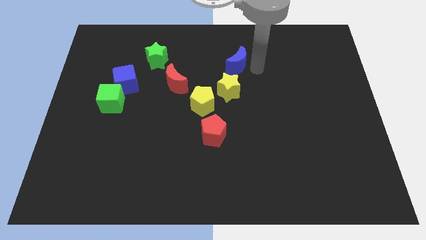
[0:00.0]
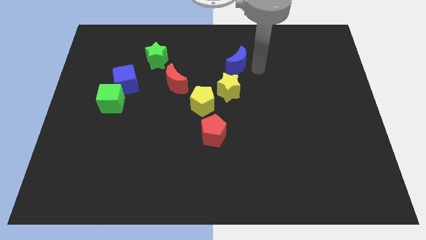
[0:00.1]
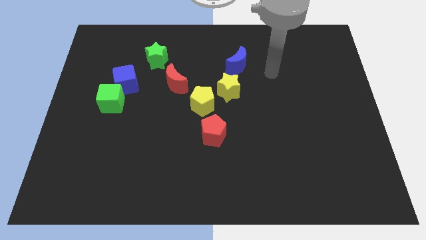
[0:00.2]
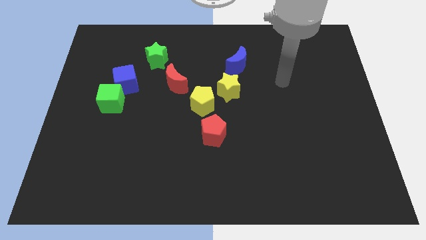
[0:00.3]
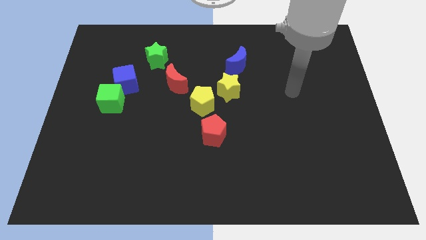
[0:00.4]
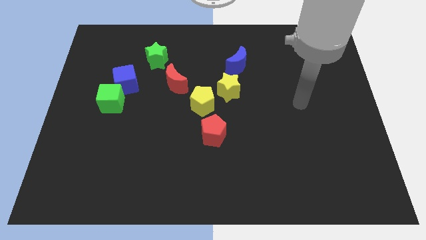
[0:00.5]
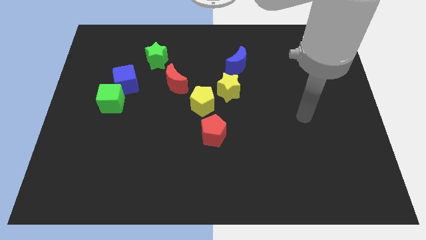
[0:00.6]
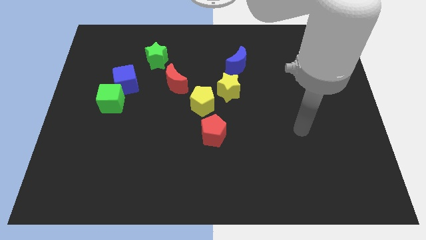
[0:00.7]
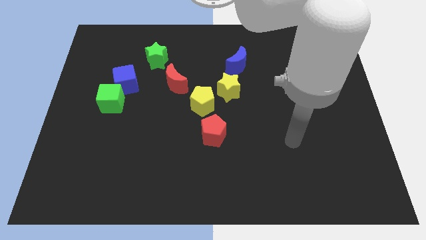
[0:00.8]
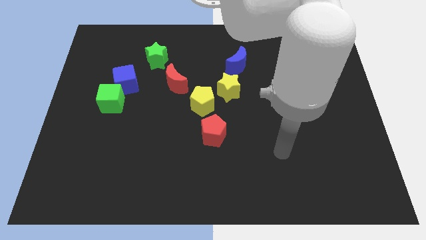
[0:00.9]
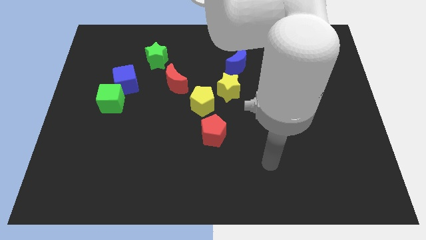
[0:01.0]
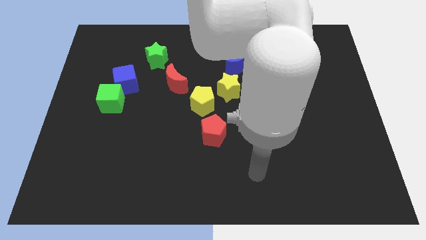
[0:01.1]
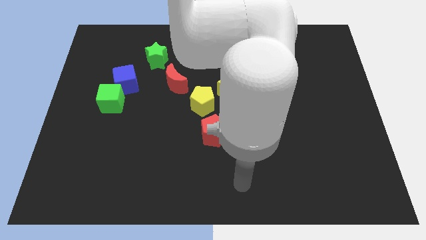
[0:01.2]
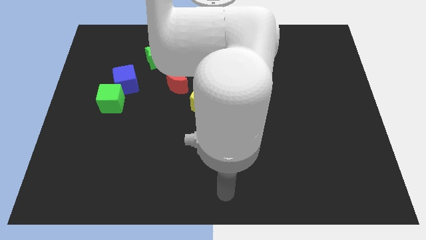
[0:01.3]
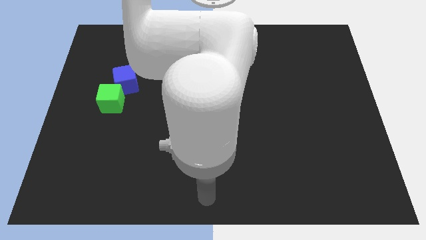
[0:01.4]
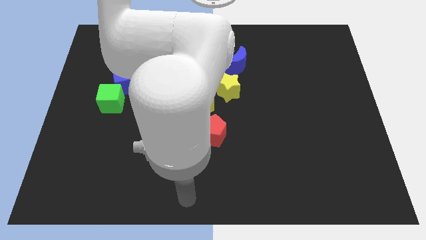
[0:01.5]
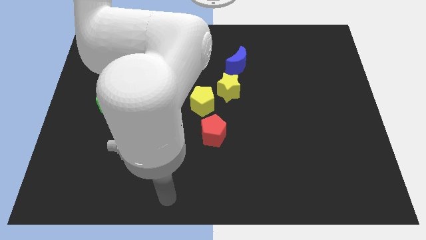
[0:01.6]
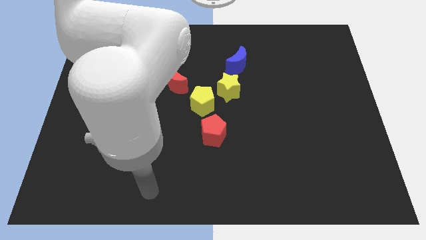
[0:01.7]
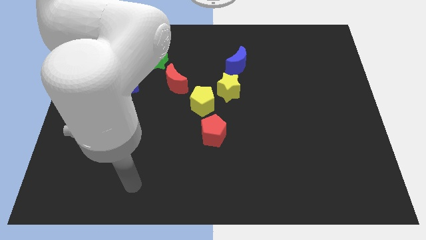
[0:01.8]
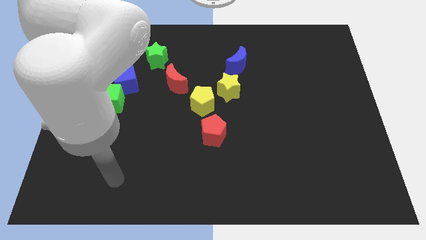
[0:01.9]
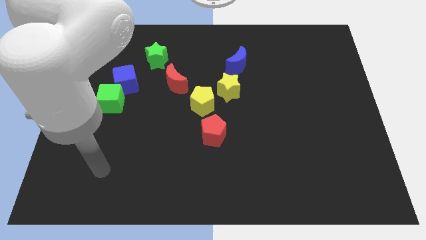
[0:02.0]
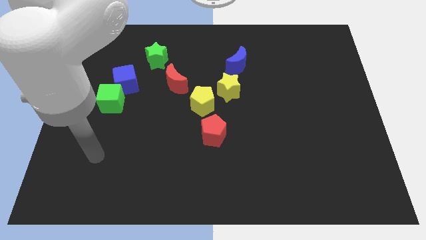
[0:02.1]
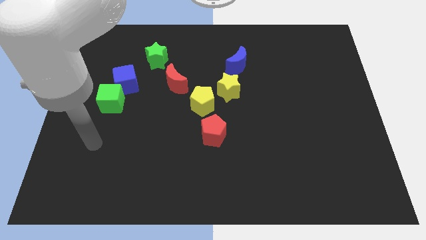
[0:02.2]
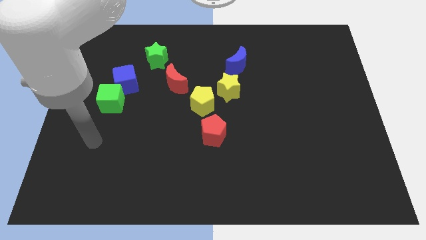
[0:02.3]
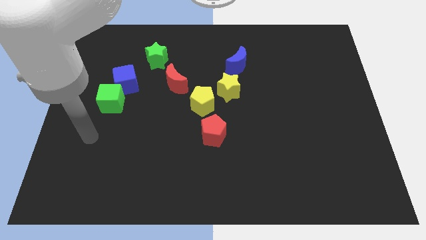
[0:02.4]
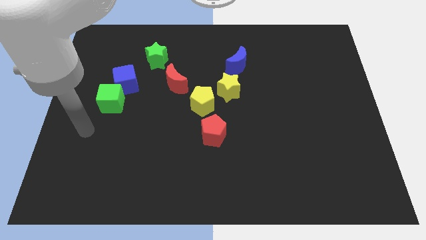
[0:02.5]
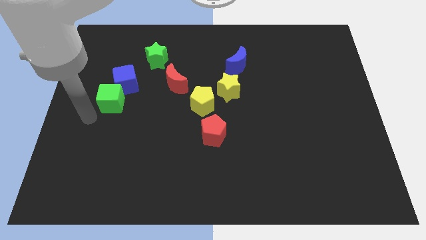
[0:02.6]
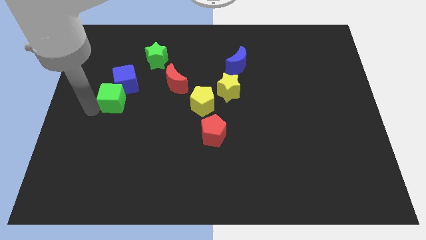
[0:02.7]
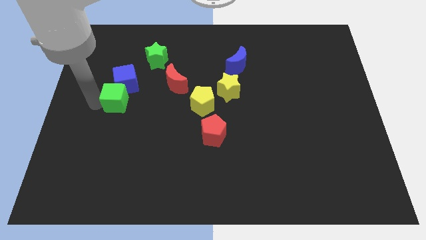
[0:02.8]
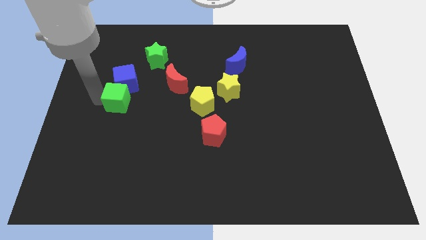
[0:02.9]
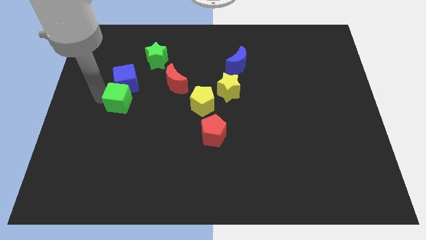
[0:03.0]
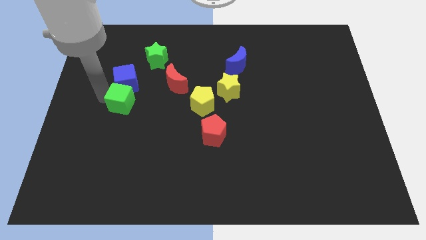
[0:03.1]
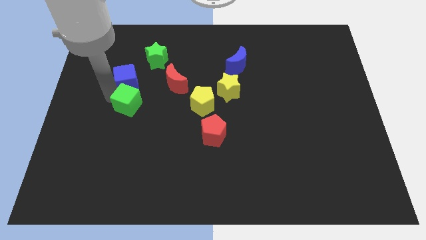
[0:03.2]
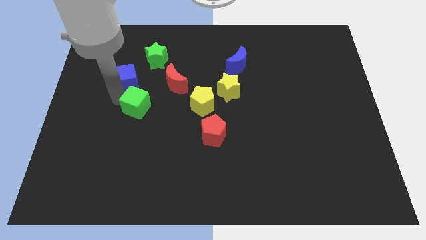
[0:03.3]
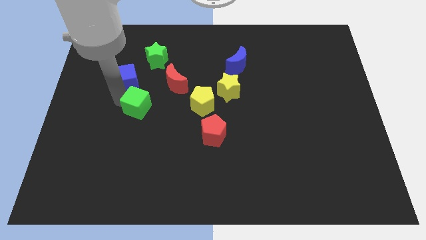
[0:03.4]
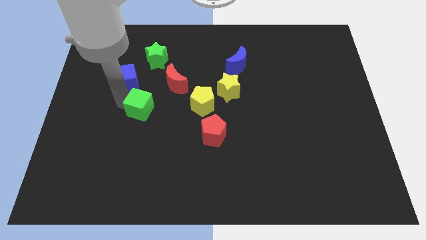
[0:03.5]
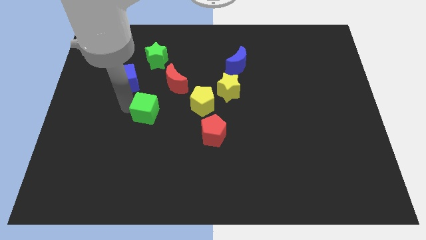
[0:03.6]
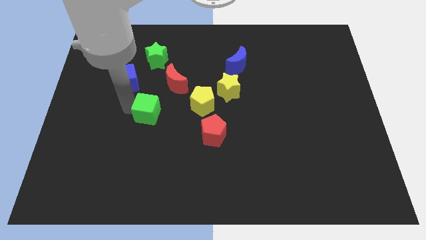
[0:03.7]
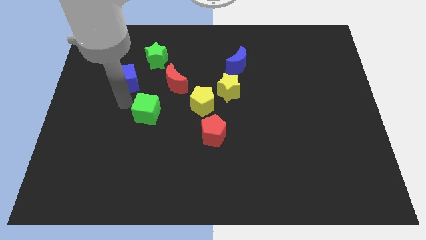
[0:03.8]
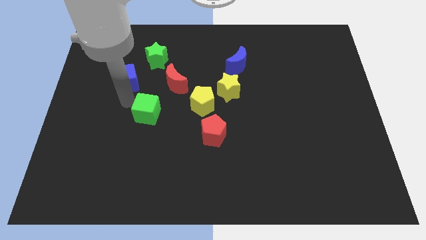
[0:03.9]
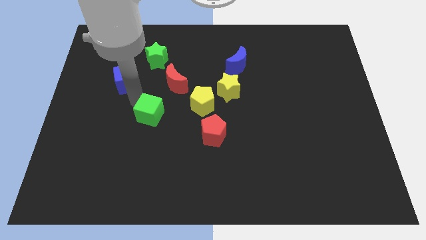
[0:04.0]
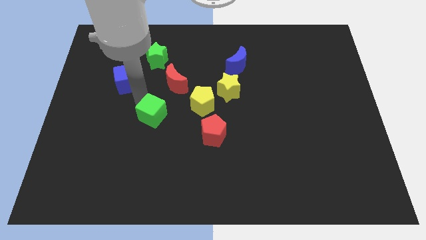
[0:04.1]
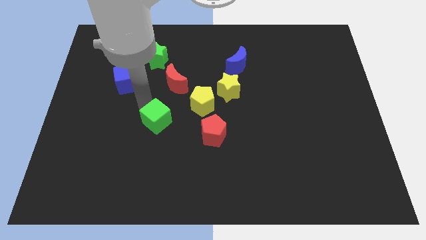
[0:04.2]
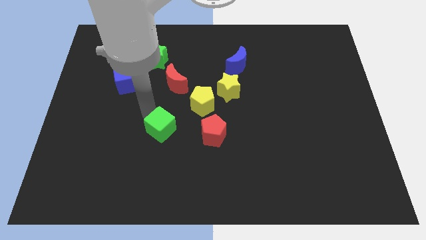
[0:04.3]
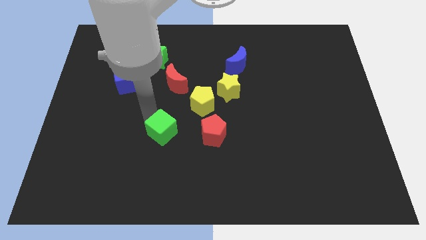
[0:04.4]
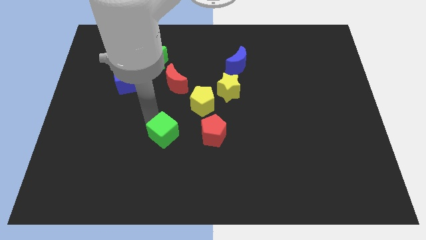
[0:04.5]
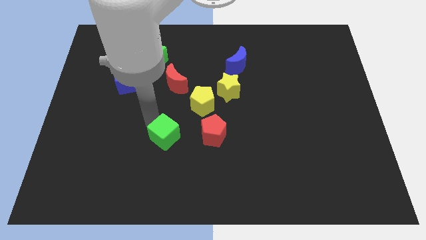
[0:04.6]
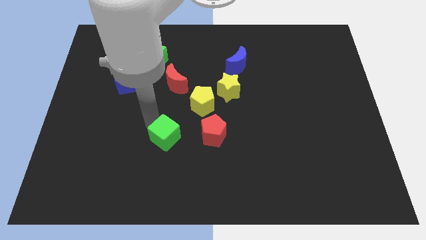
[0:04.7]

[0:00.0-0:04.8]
place the green cube to the left of the red pentagon

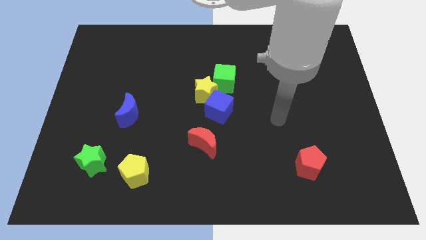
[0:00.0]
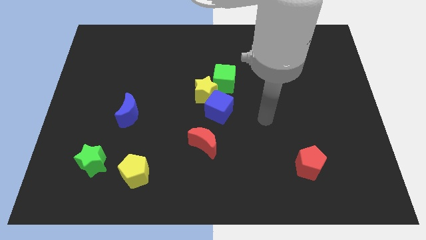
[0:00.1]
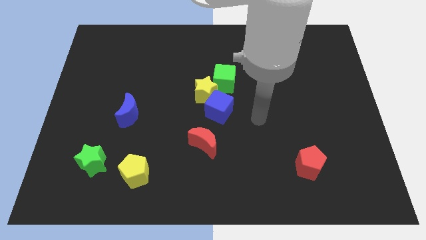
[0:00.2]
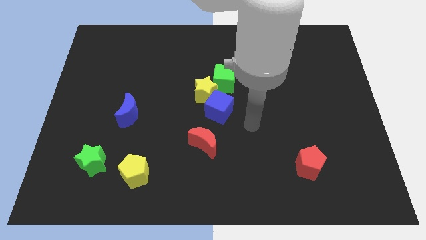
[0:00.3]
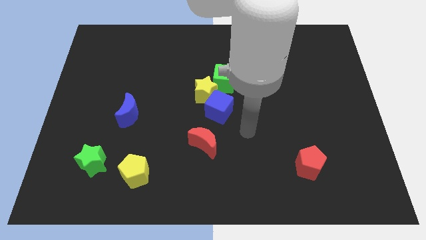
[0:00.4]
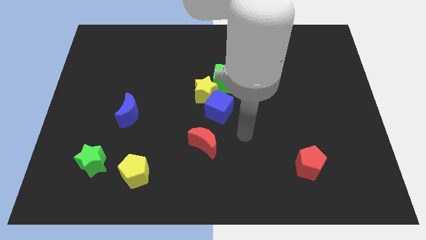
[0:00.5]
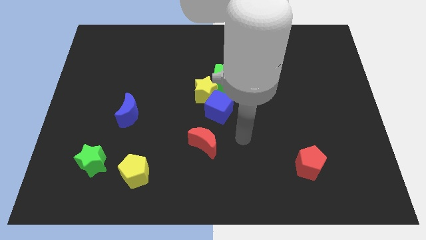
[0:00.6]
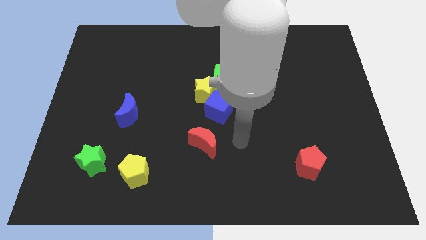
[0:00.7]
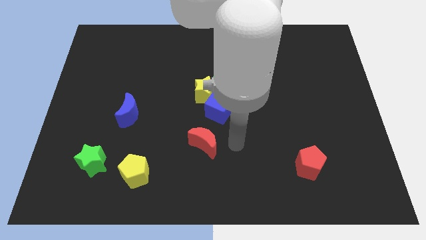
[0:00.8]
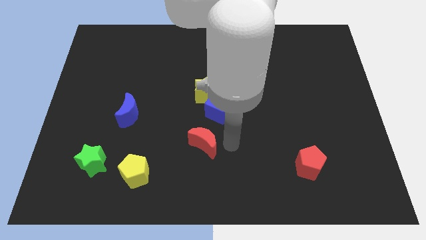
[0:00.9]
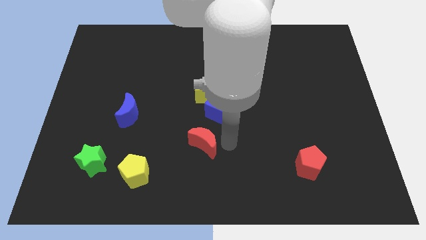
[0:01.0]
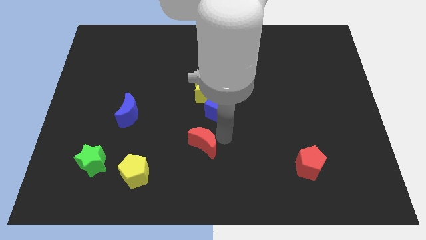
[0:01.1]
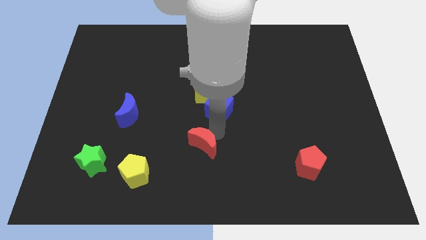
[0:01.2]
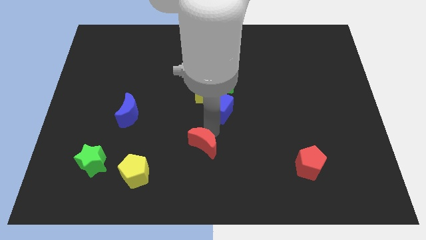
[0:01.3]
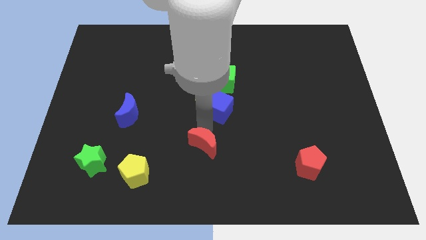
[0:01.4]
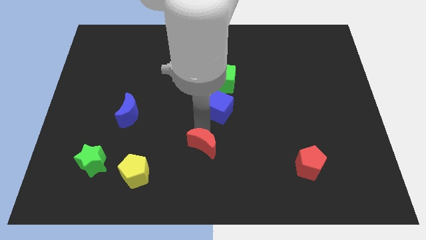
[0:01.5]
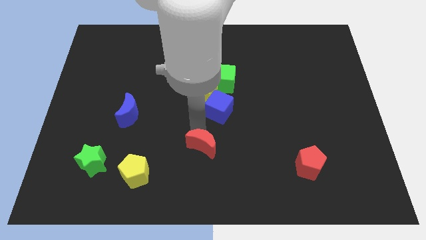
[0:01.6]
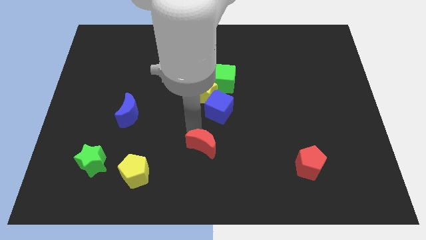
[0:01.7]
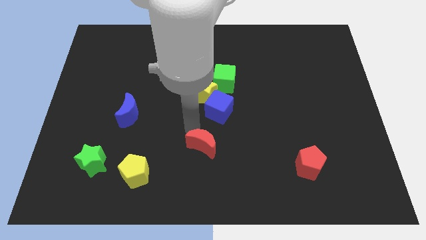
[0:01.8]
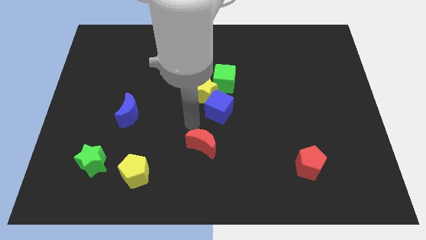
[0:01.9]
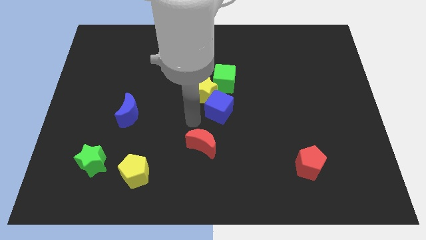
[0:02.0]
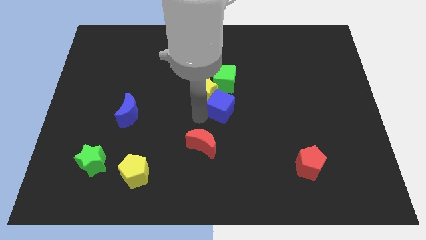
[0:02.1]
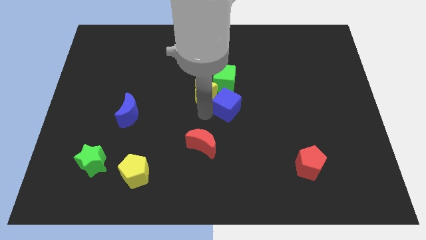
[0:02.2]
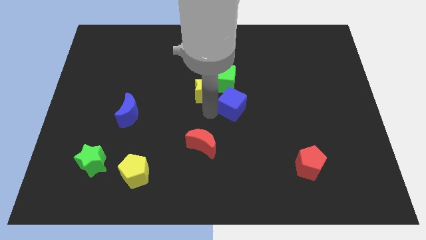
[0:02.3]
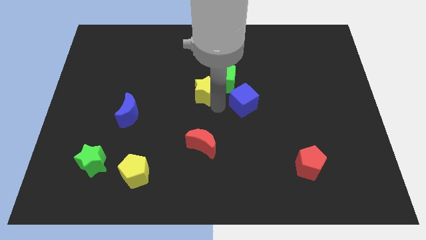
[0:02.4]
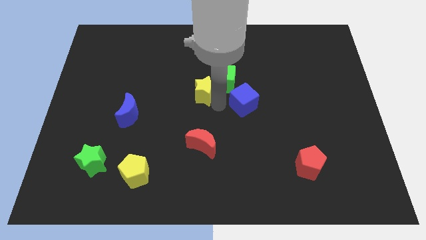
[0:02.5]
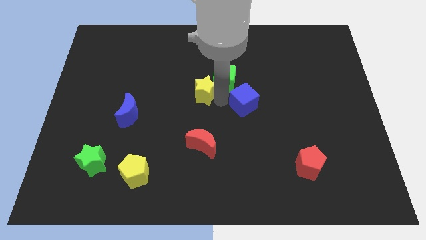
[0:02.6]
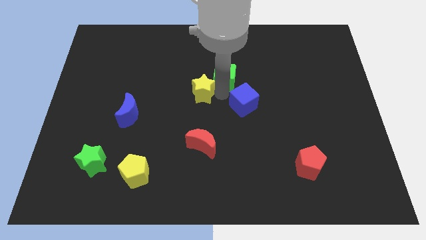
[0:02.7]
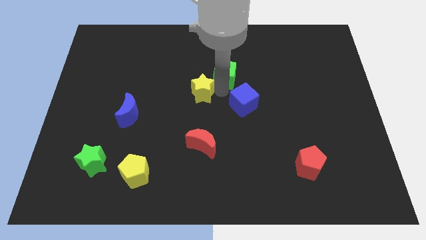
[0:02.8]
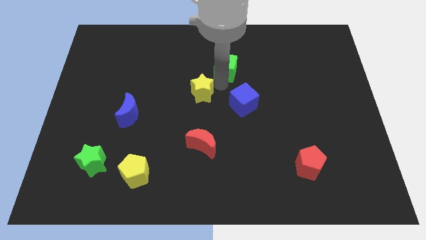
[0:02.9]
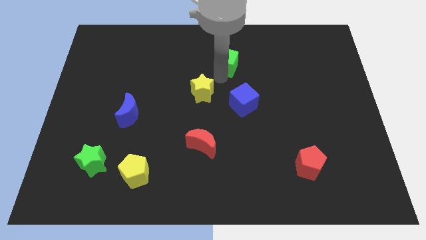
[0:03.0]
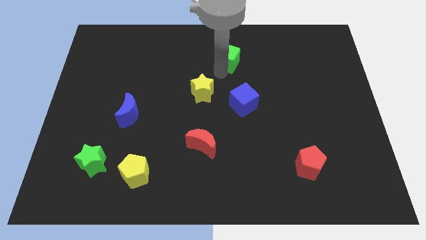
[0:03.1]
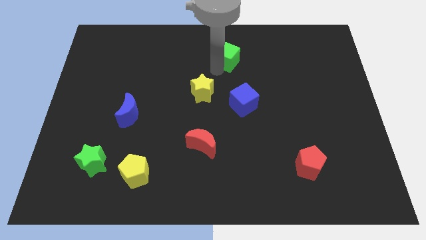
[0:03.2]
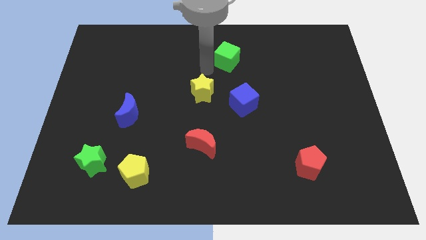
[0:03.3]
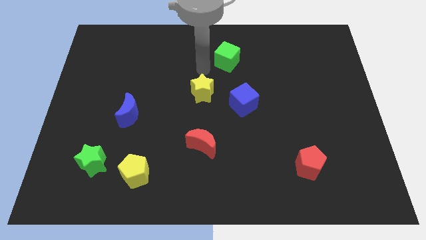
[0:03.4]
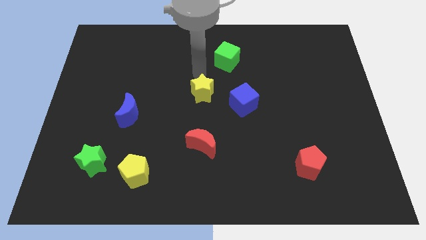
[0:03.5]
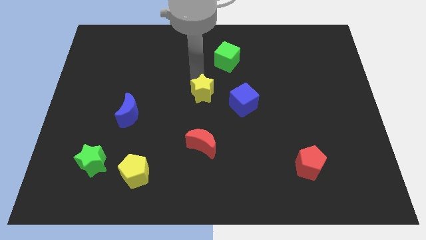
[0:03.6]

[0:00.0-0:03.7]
apart yellow star blue cube and green cube

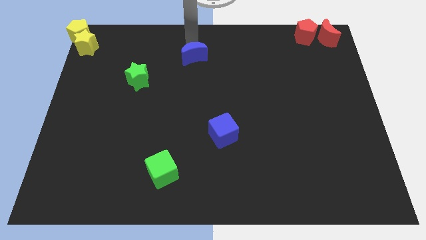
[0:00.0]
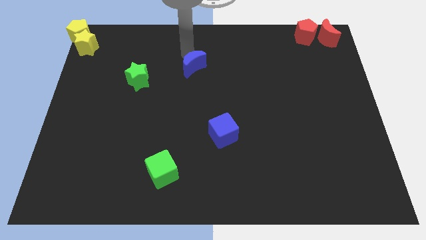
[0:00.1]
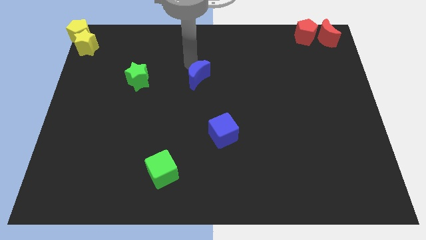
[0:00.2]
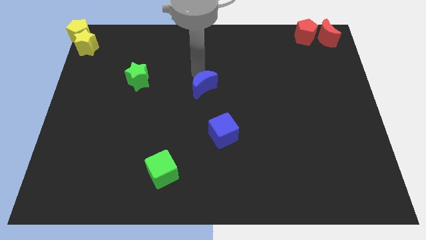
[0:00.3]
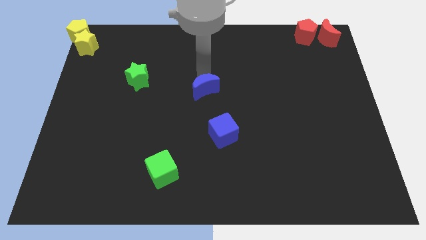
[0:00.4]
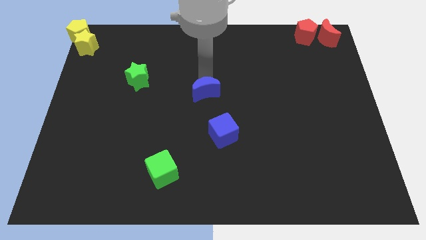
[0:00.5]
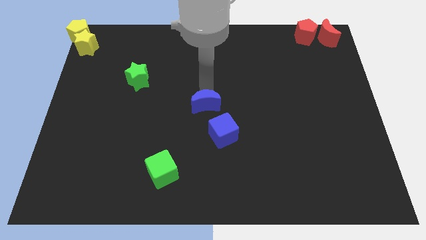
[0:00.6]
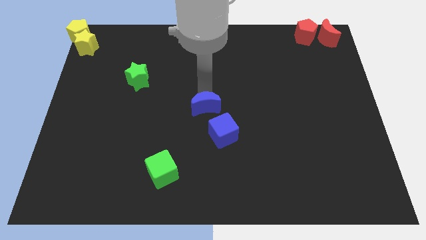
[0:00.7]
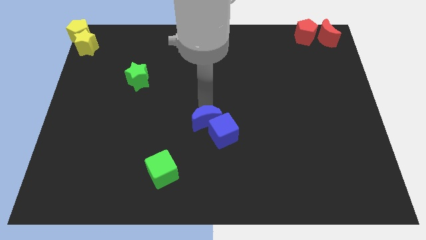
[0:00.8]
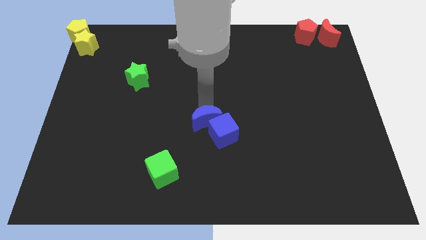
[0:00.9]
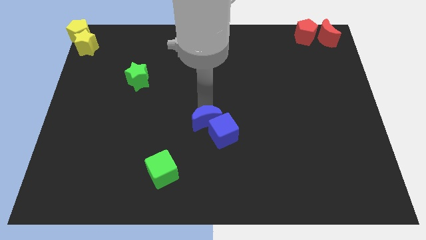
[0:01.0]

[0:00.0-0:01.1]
move the blue moon into blue cube
